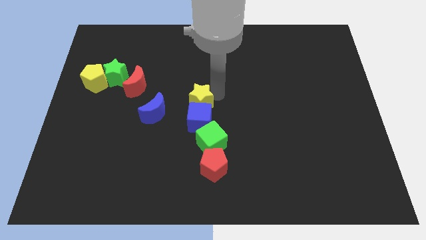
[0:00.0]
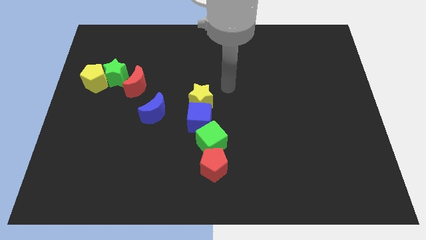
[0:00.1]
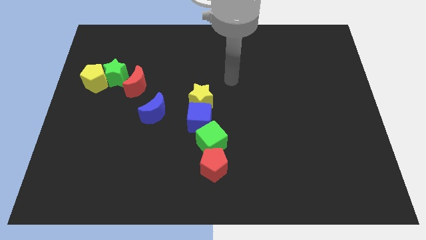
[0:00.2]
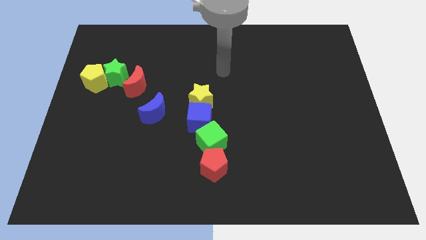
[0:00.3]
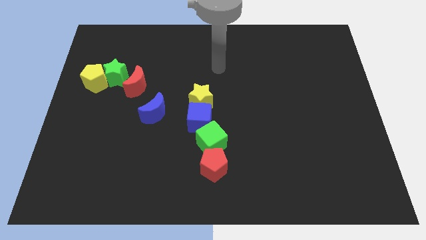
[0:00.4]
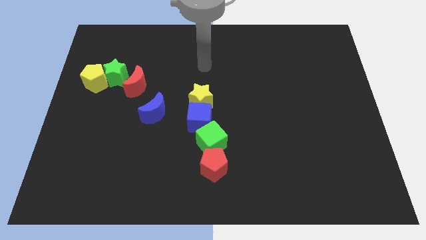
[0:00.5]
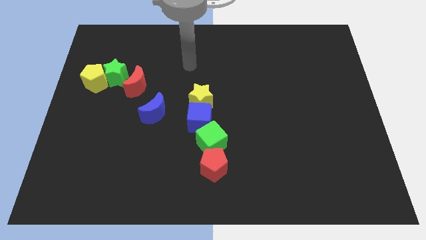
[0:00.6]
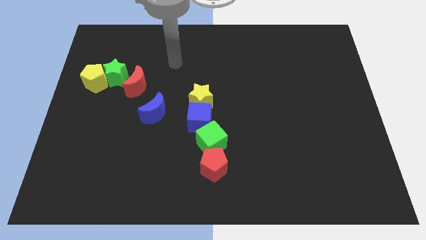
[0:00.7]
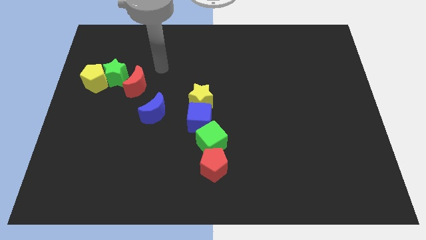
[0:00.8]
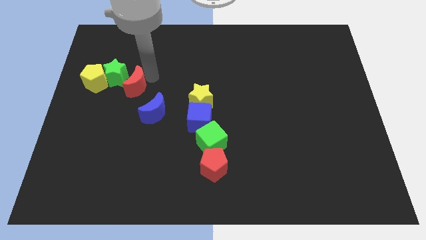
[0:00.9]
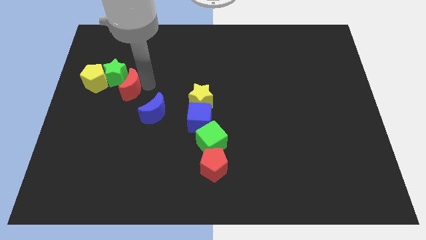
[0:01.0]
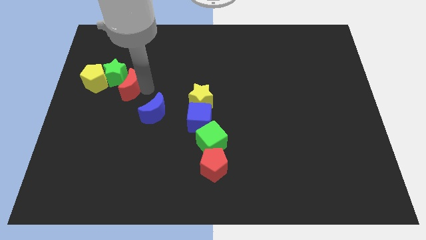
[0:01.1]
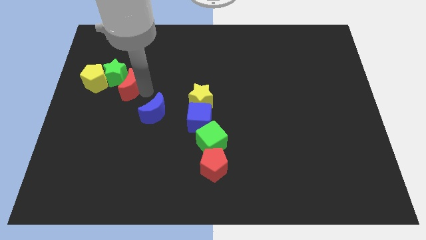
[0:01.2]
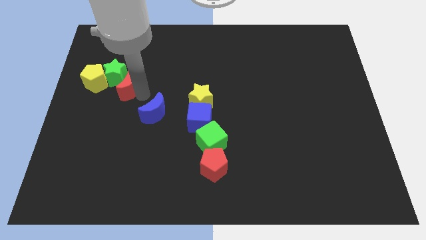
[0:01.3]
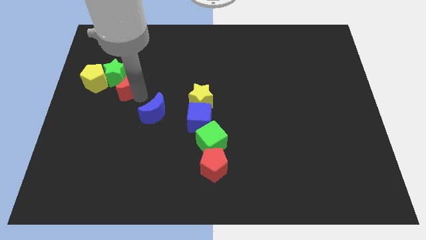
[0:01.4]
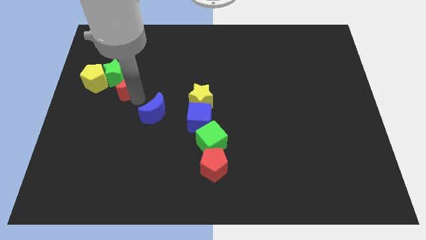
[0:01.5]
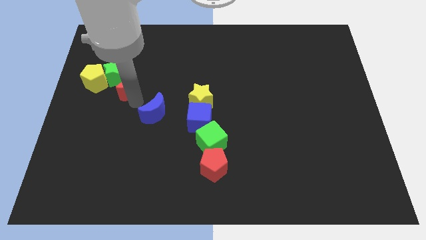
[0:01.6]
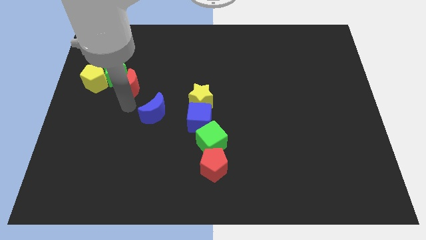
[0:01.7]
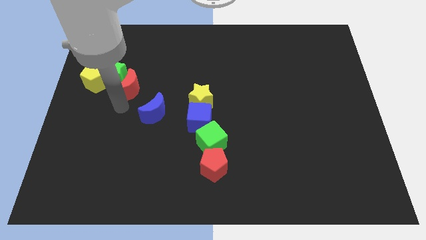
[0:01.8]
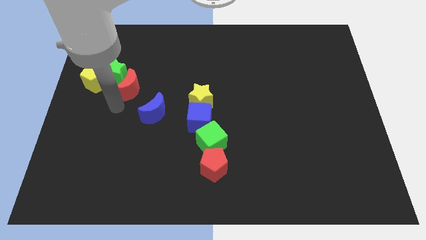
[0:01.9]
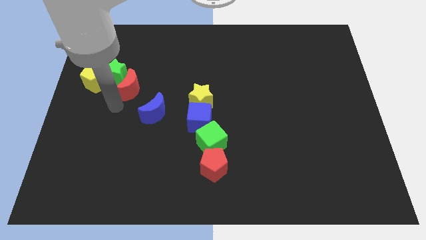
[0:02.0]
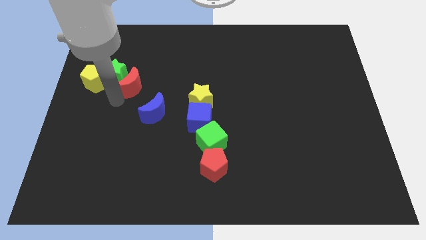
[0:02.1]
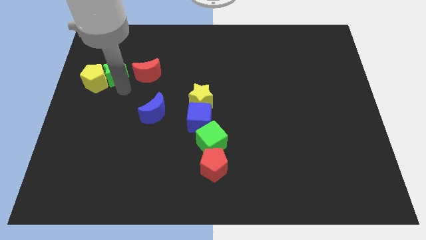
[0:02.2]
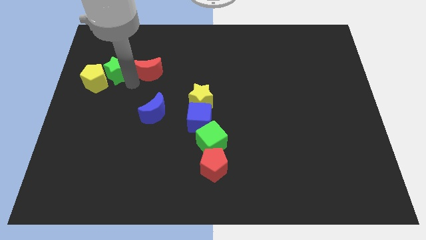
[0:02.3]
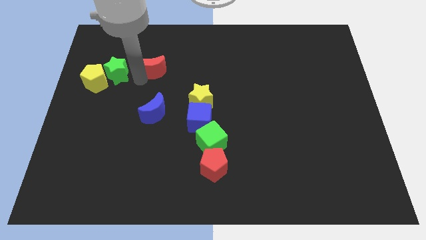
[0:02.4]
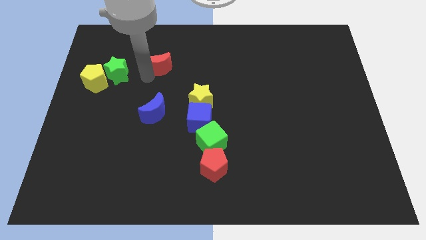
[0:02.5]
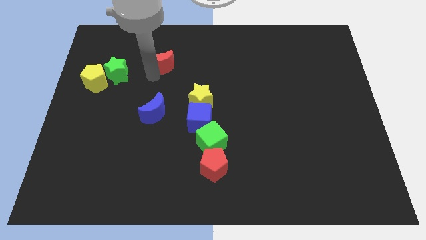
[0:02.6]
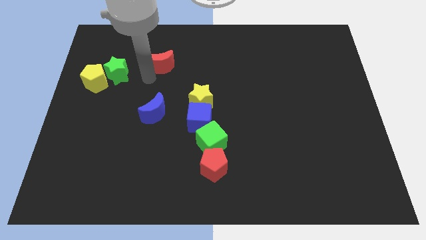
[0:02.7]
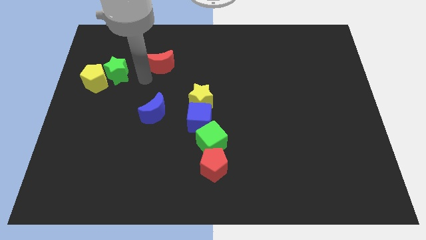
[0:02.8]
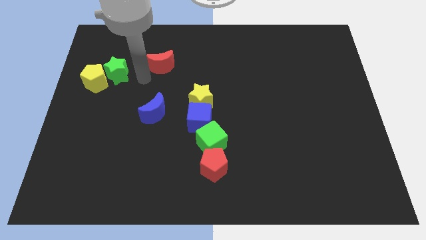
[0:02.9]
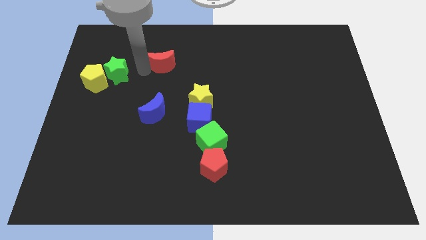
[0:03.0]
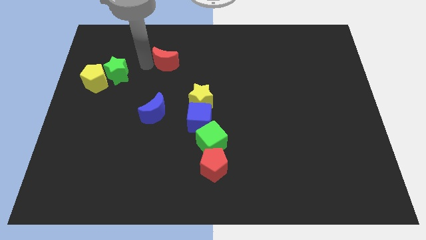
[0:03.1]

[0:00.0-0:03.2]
place the red moon diagonally to yellow star

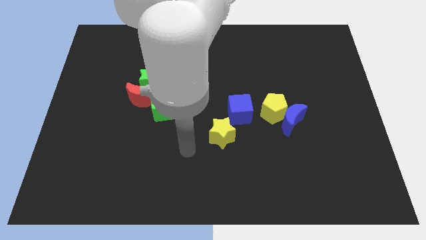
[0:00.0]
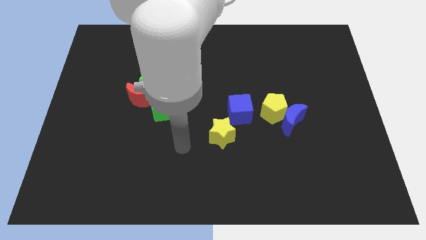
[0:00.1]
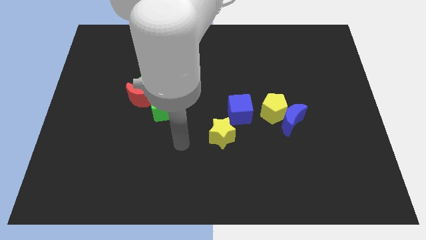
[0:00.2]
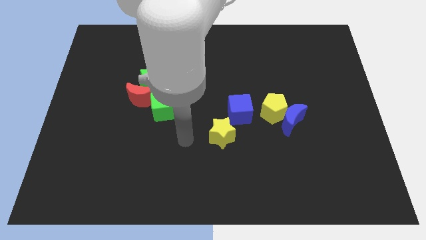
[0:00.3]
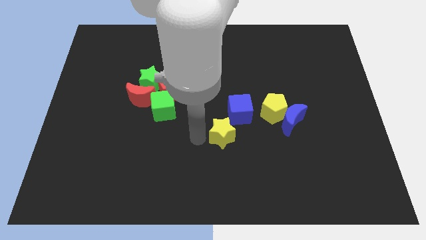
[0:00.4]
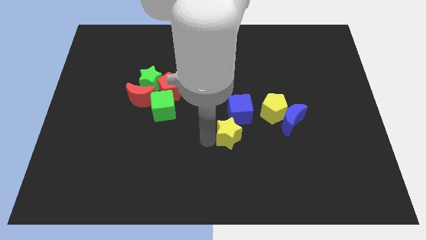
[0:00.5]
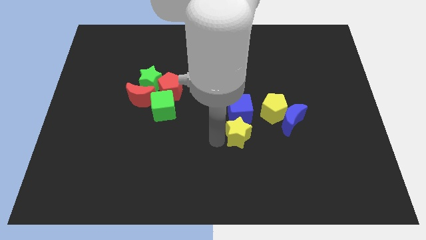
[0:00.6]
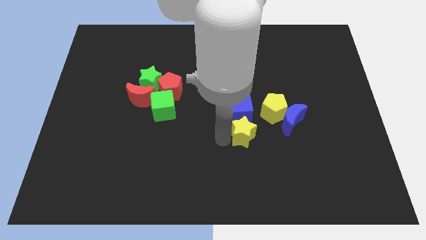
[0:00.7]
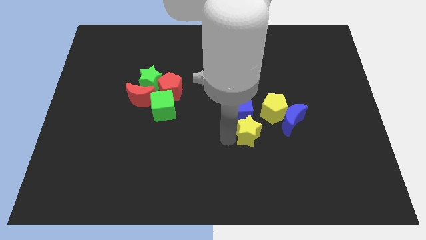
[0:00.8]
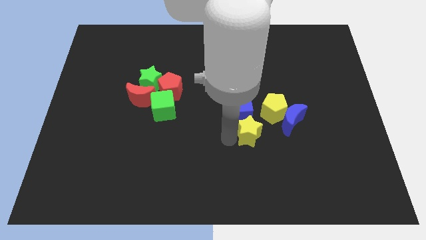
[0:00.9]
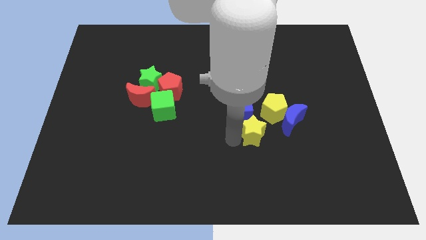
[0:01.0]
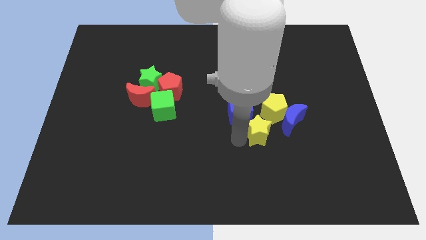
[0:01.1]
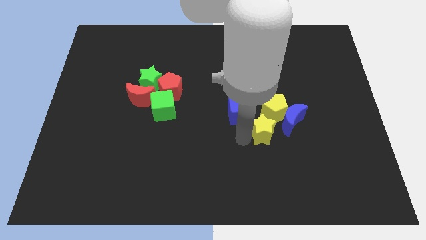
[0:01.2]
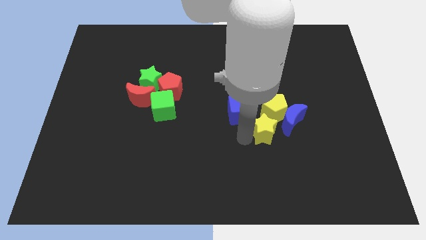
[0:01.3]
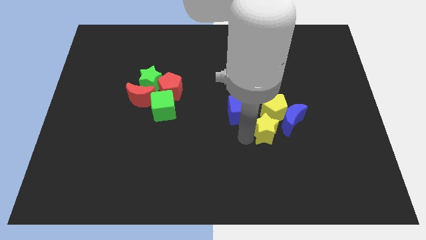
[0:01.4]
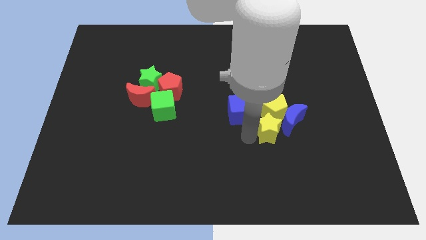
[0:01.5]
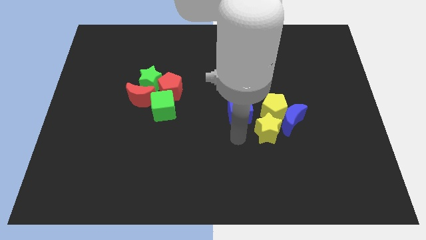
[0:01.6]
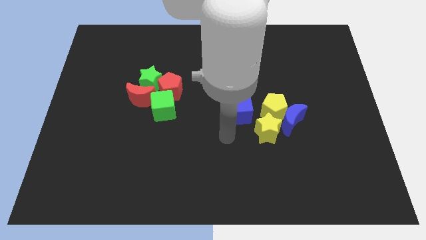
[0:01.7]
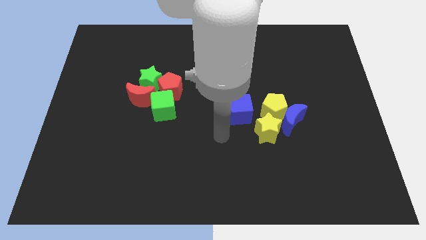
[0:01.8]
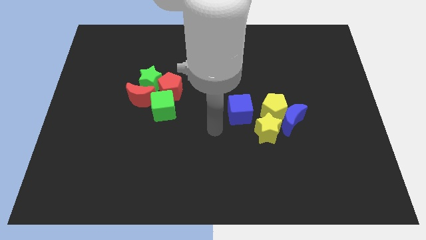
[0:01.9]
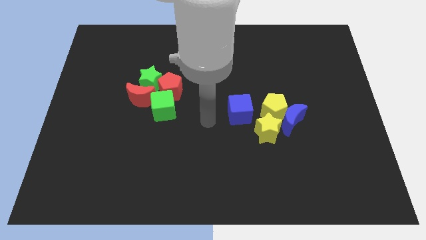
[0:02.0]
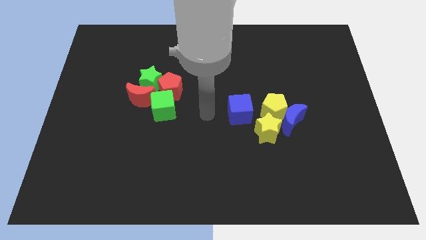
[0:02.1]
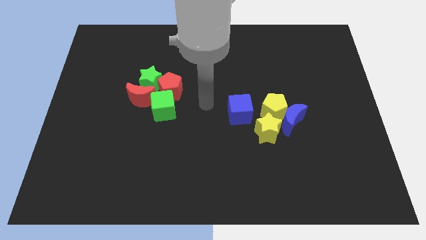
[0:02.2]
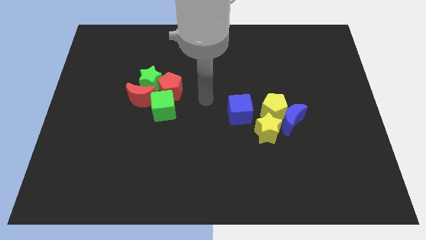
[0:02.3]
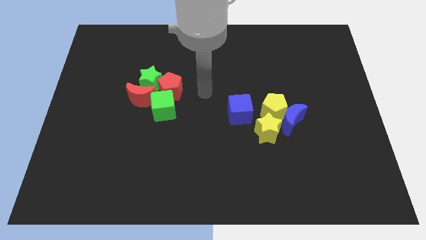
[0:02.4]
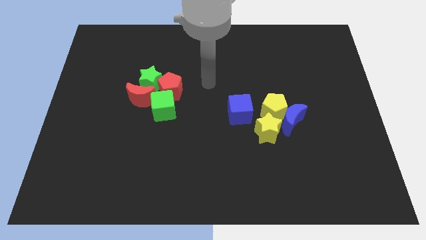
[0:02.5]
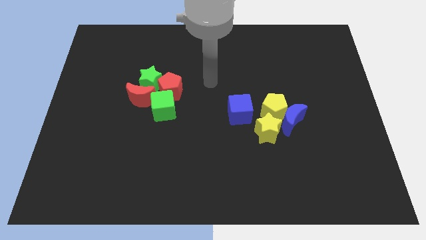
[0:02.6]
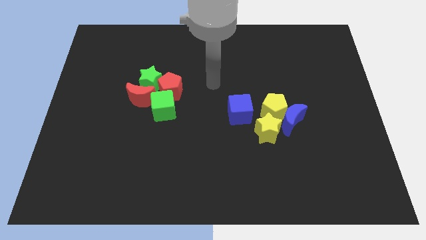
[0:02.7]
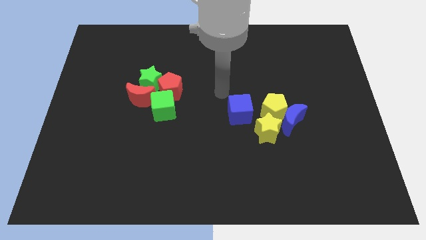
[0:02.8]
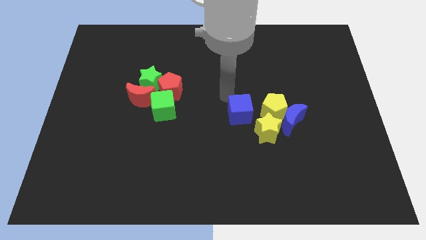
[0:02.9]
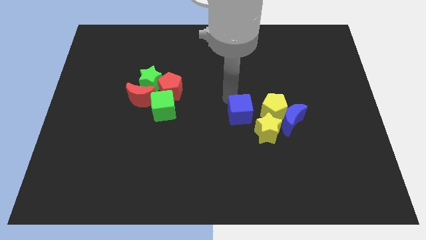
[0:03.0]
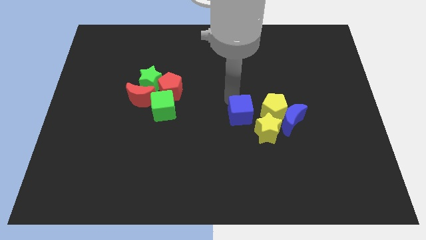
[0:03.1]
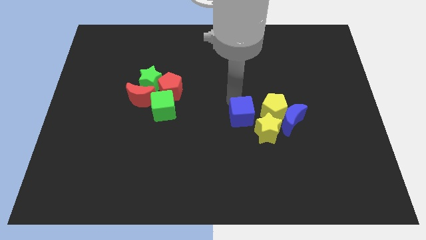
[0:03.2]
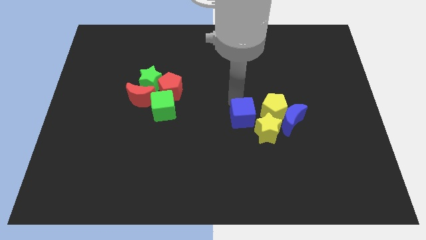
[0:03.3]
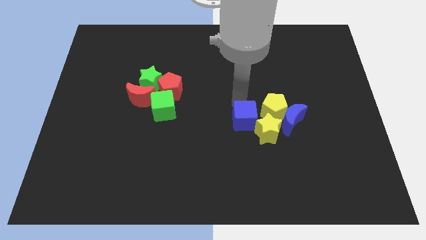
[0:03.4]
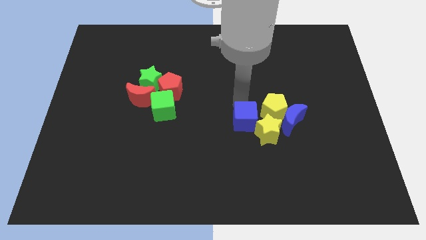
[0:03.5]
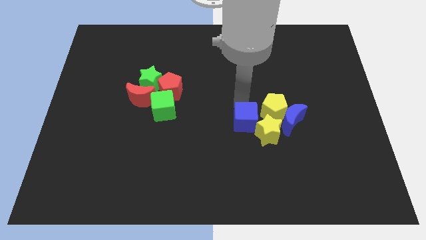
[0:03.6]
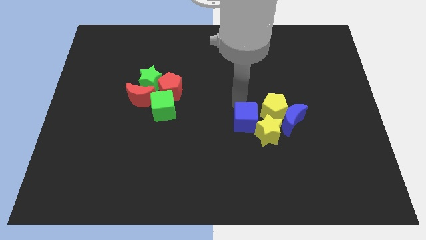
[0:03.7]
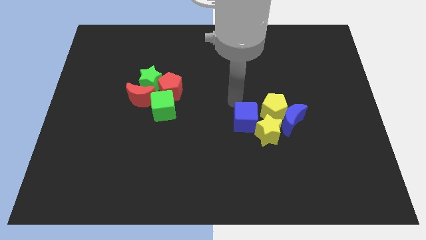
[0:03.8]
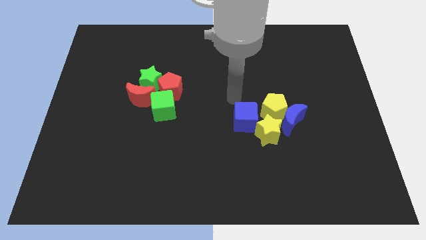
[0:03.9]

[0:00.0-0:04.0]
place the yellow star backward yellow pentagon while pushing the blue cube close to yellow star

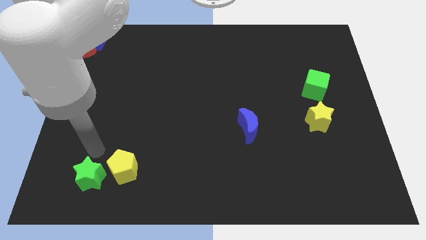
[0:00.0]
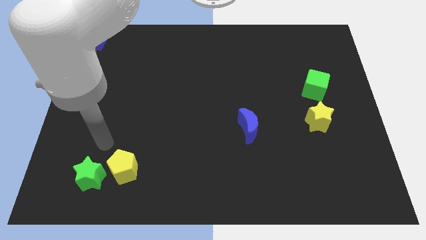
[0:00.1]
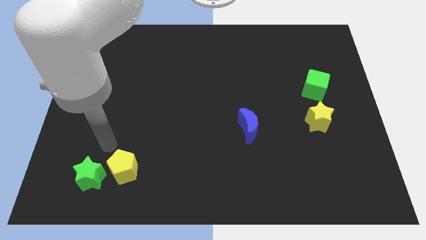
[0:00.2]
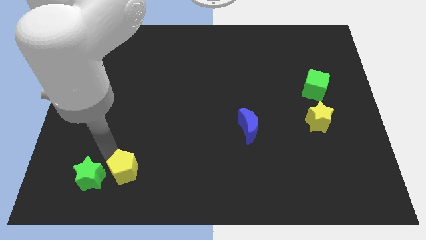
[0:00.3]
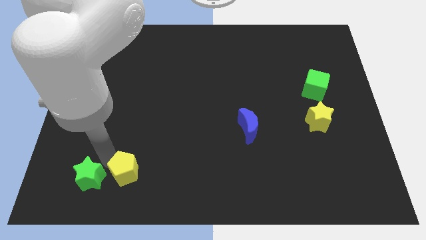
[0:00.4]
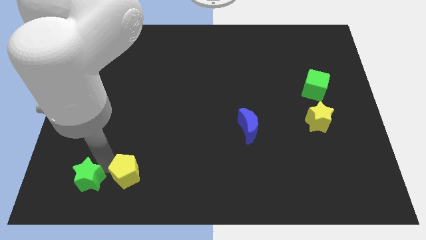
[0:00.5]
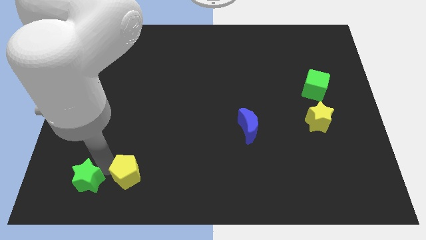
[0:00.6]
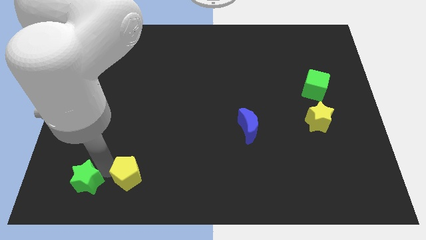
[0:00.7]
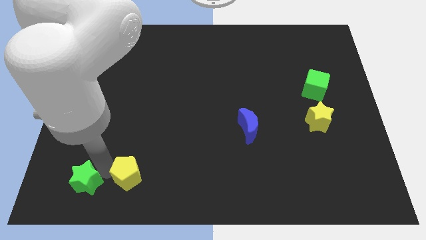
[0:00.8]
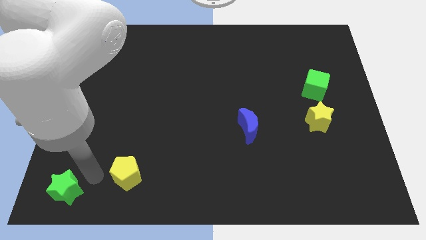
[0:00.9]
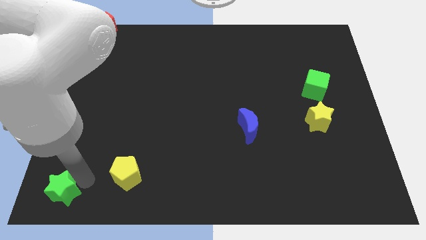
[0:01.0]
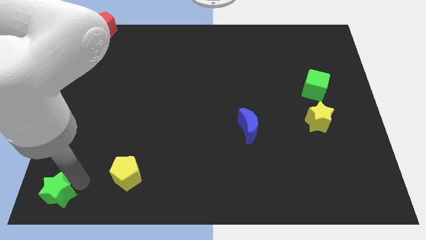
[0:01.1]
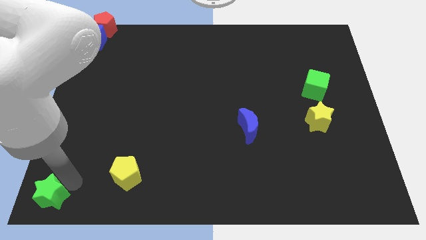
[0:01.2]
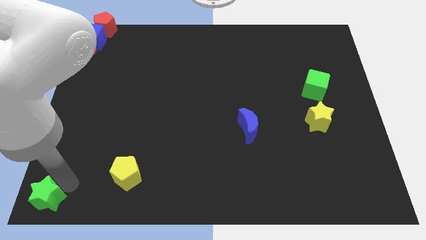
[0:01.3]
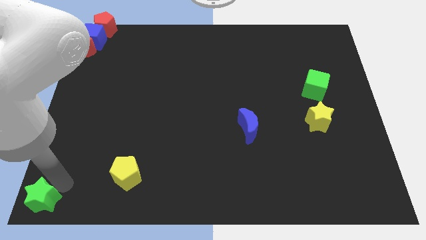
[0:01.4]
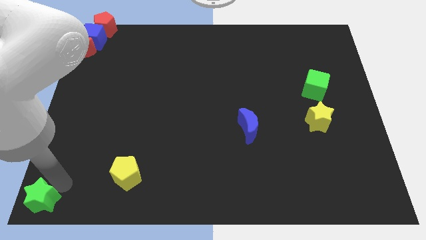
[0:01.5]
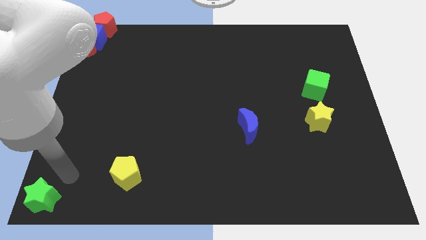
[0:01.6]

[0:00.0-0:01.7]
push the green star to the bottom left corner
